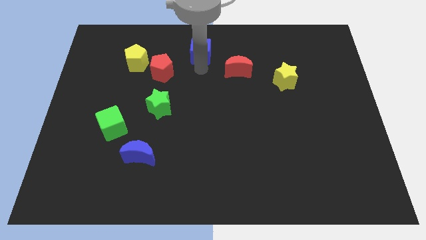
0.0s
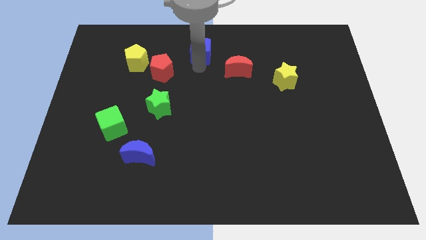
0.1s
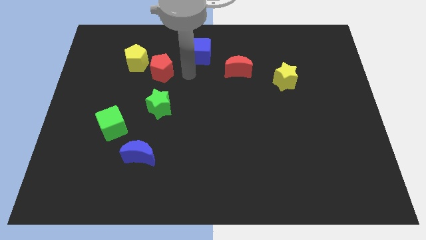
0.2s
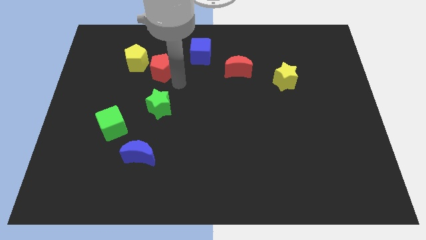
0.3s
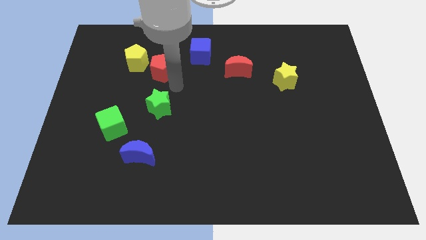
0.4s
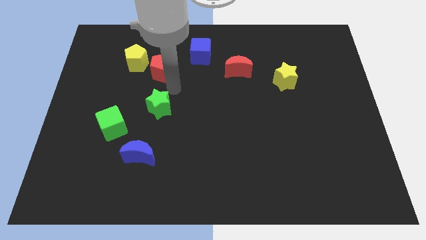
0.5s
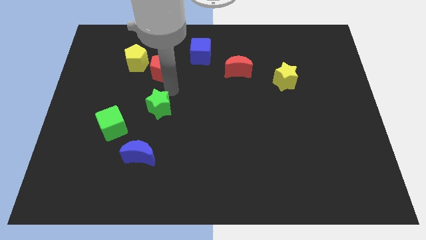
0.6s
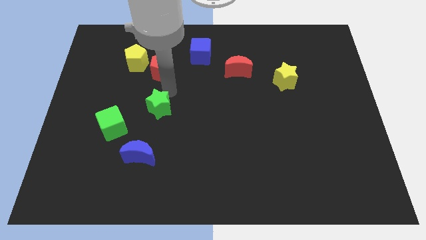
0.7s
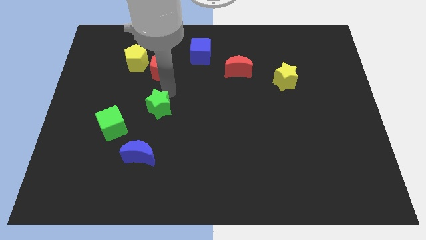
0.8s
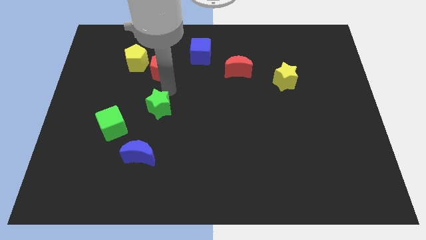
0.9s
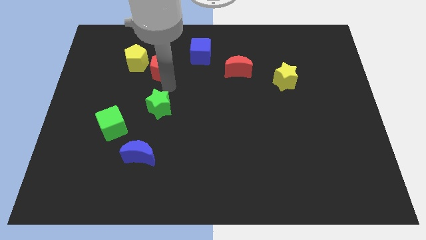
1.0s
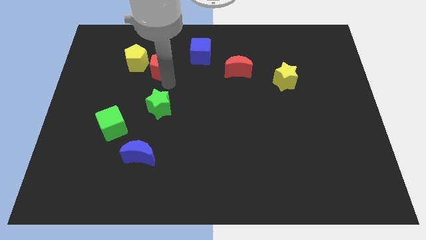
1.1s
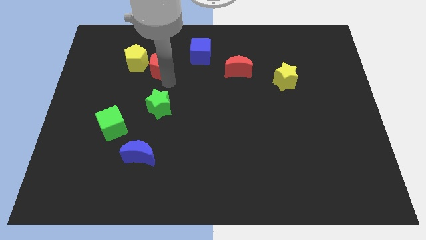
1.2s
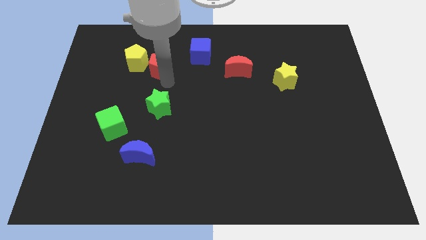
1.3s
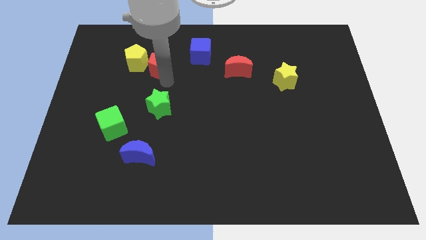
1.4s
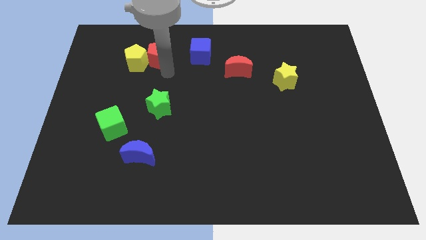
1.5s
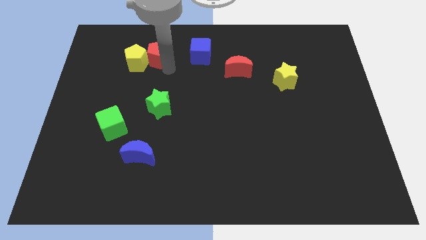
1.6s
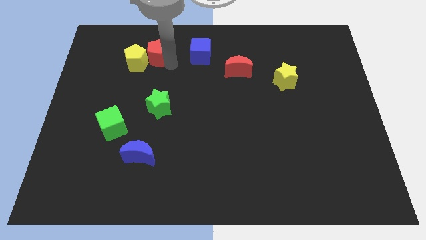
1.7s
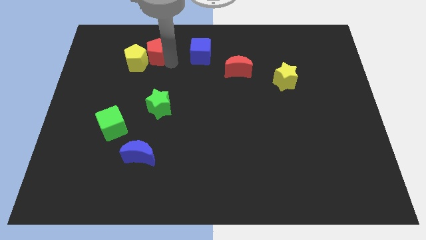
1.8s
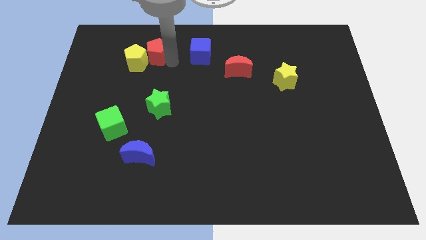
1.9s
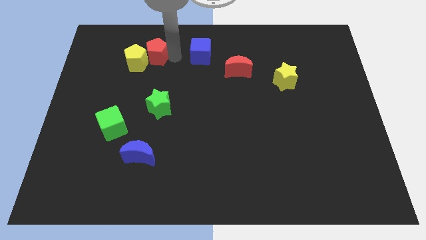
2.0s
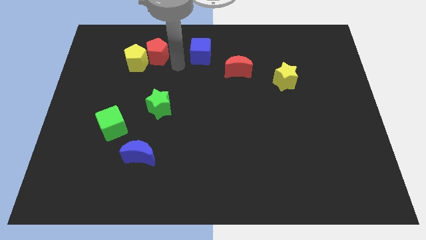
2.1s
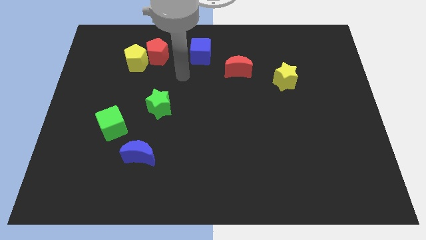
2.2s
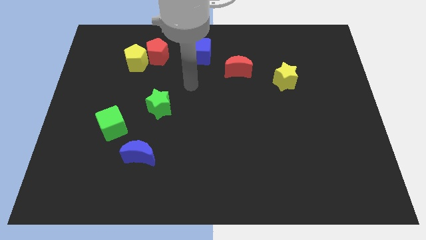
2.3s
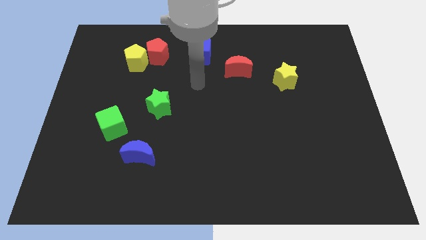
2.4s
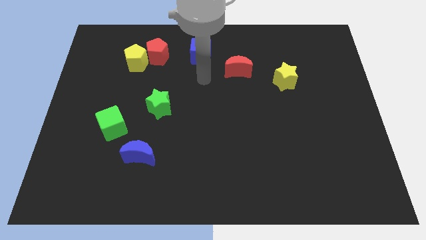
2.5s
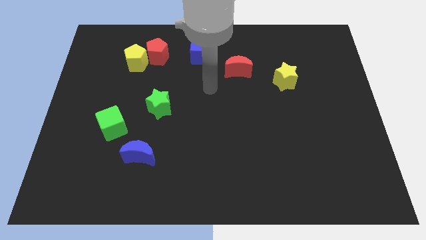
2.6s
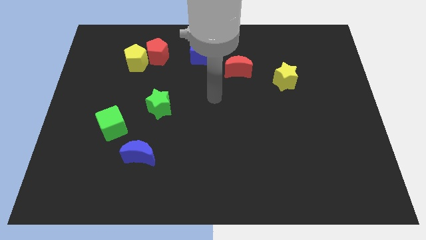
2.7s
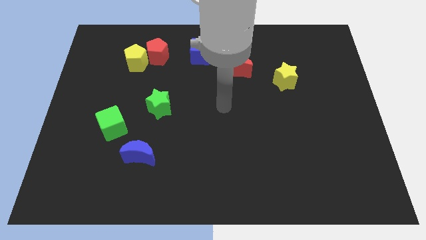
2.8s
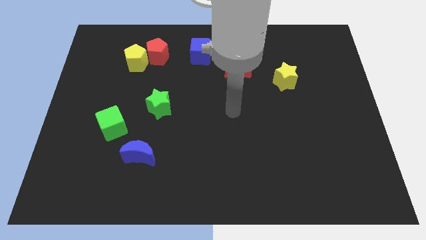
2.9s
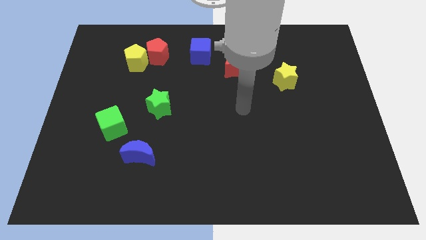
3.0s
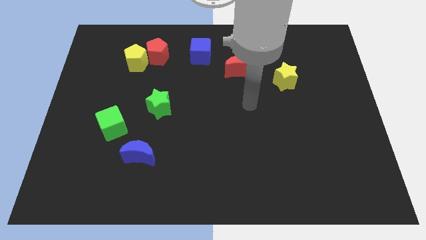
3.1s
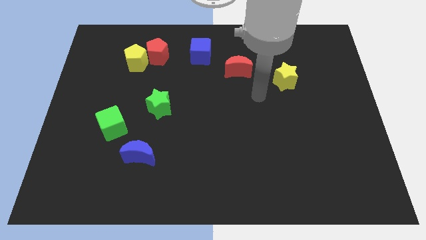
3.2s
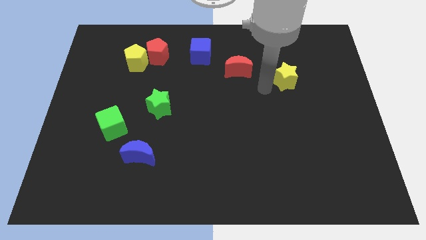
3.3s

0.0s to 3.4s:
move the arm to the bottom left of the yellow star

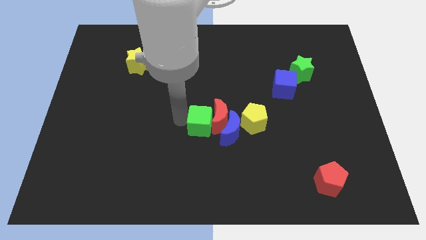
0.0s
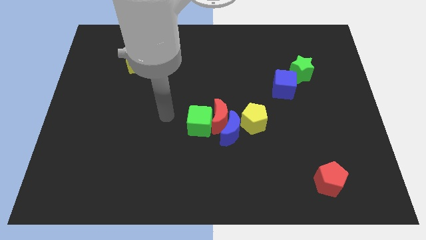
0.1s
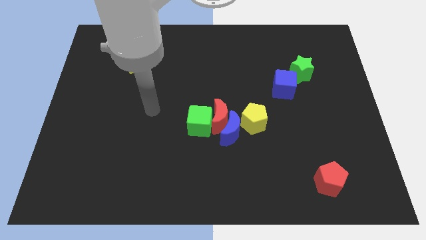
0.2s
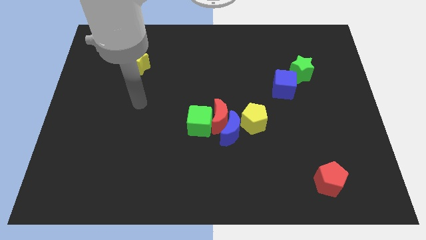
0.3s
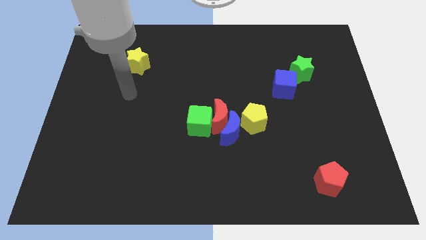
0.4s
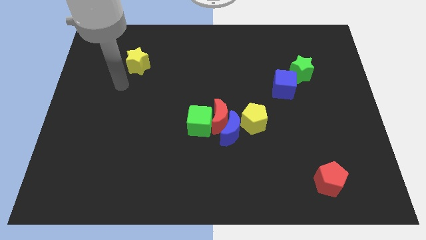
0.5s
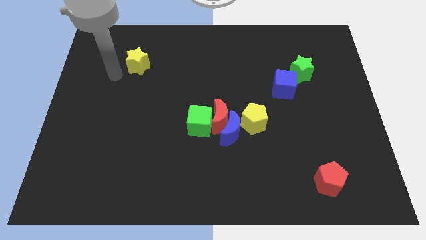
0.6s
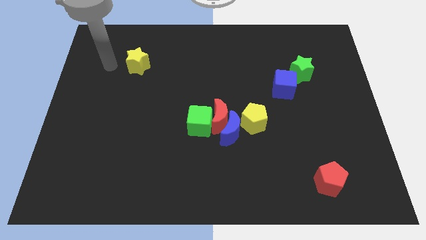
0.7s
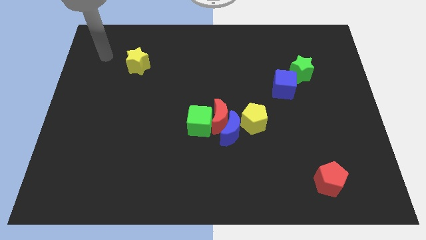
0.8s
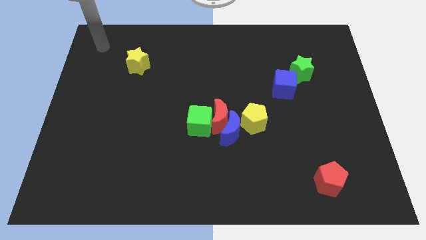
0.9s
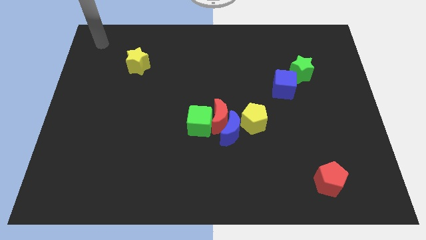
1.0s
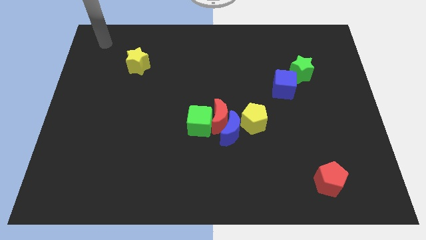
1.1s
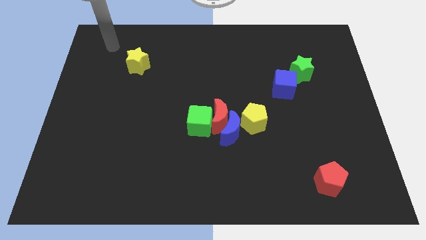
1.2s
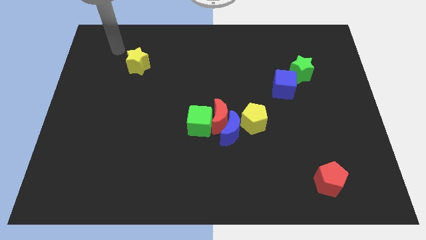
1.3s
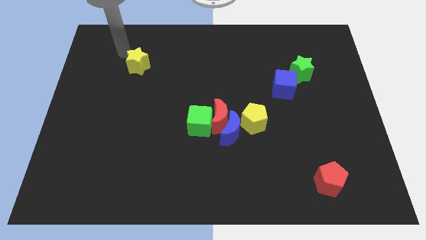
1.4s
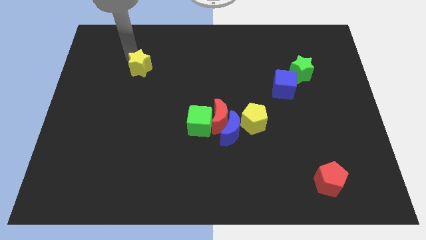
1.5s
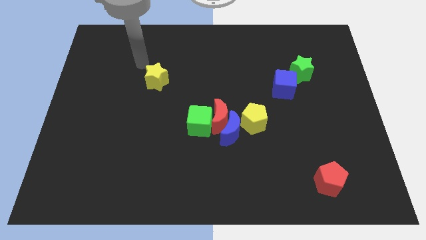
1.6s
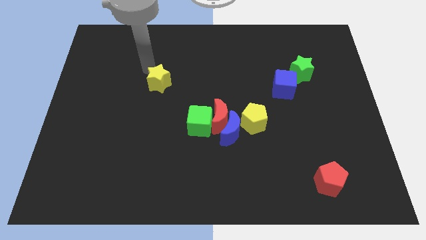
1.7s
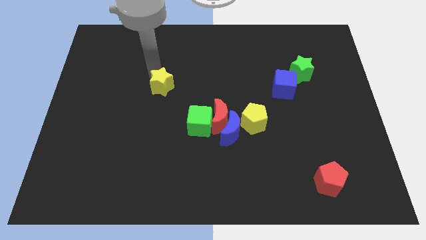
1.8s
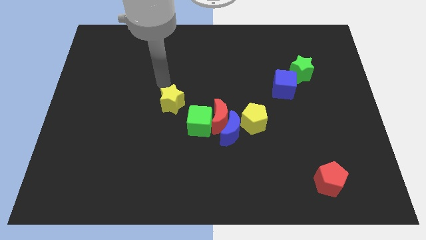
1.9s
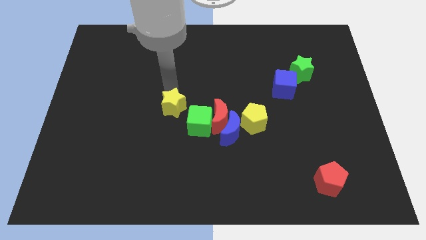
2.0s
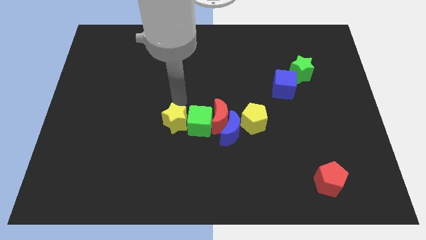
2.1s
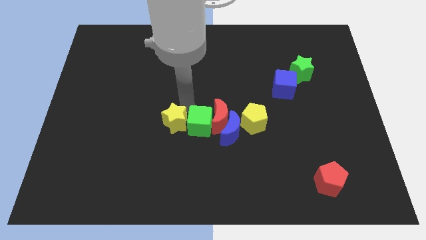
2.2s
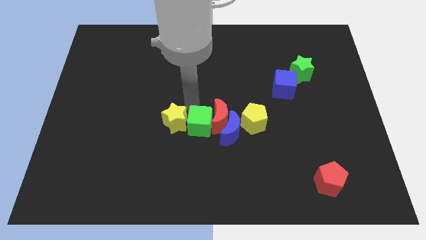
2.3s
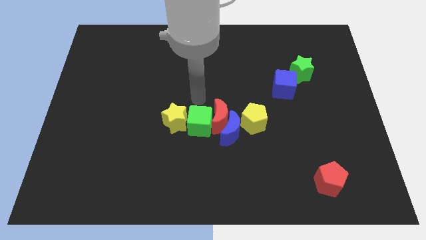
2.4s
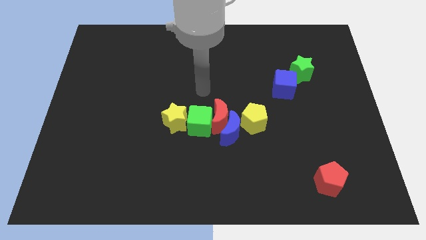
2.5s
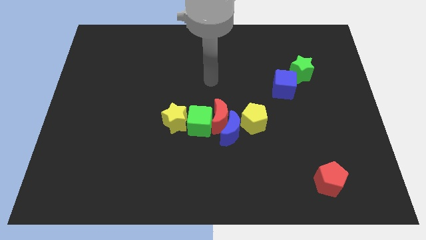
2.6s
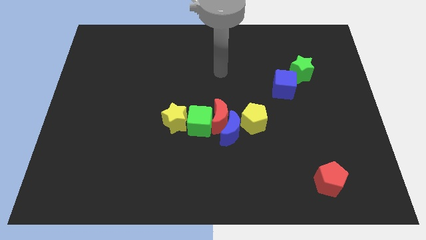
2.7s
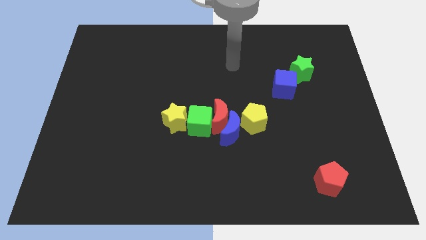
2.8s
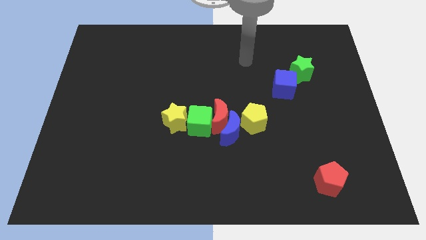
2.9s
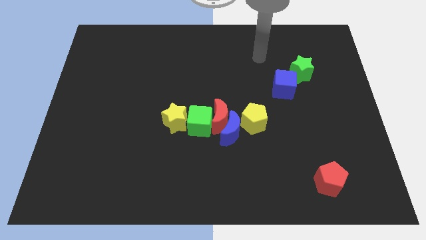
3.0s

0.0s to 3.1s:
move the yellow star at the left side of the green cube

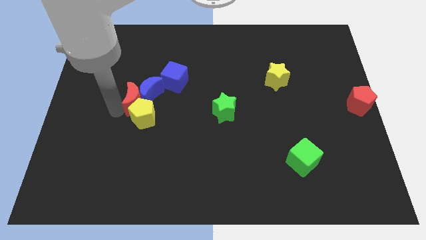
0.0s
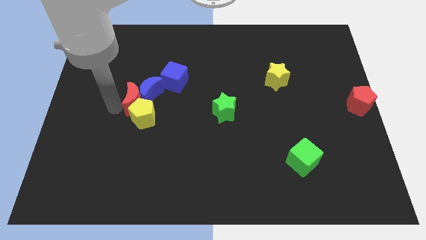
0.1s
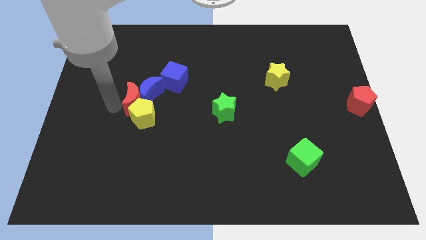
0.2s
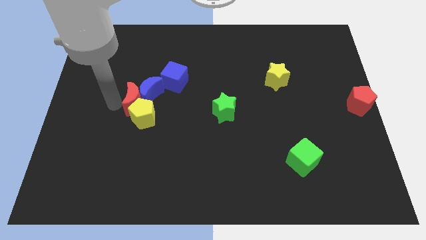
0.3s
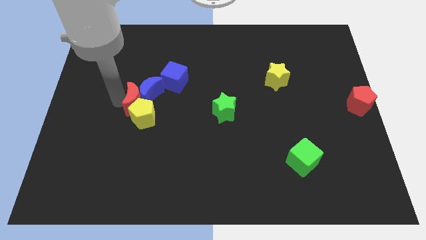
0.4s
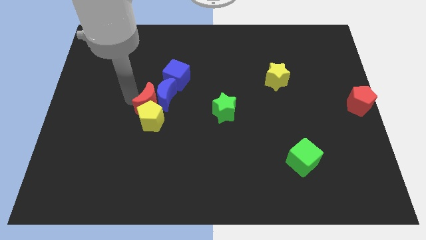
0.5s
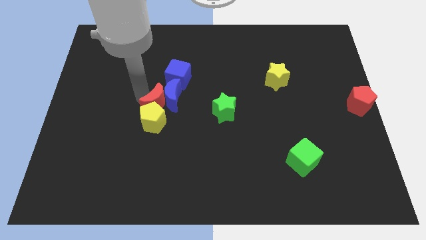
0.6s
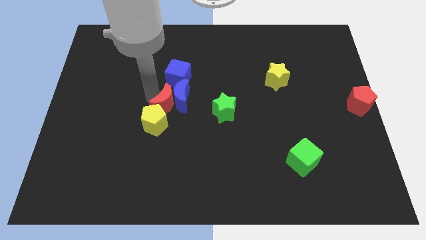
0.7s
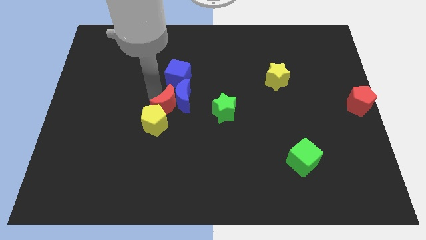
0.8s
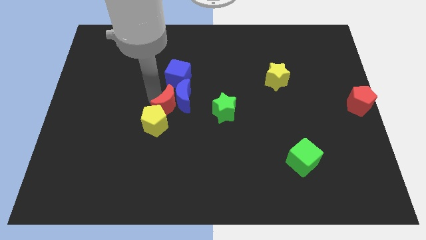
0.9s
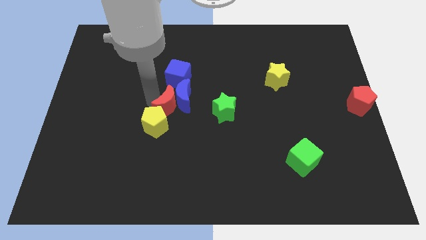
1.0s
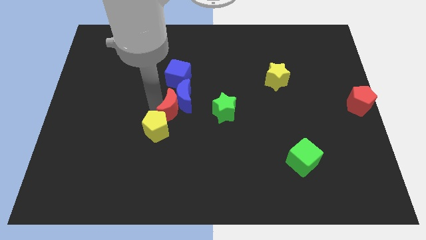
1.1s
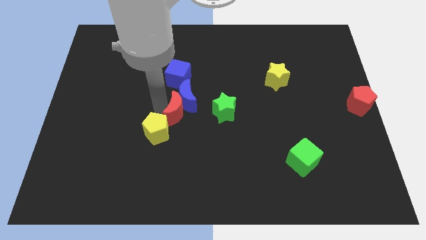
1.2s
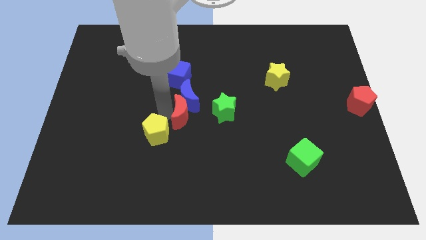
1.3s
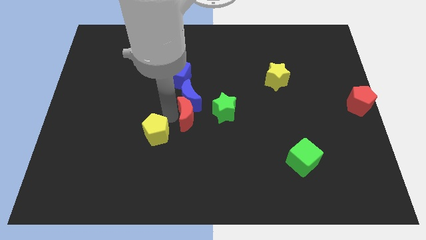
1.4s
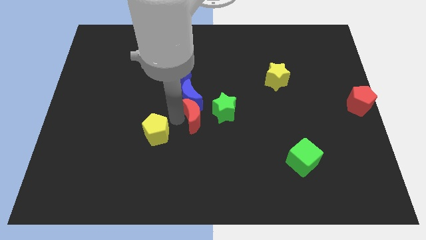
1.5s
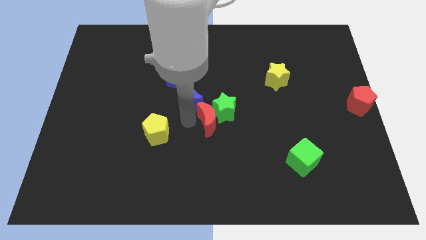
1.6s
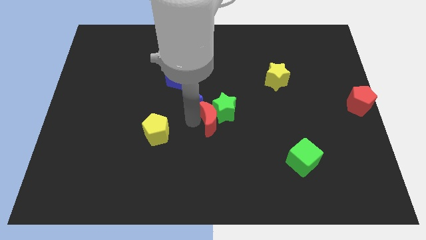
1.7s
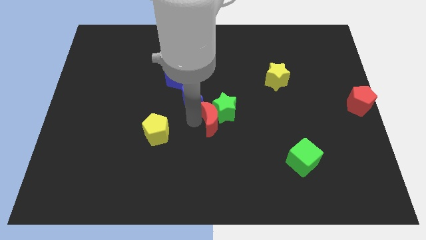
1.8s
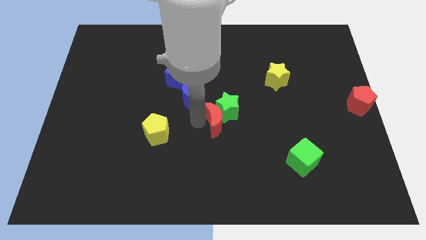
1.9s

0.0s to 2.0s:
push red crescent towards green star

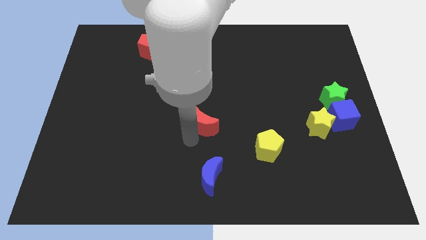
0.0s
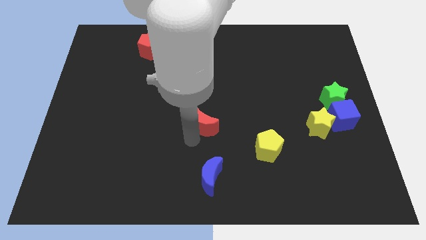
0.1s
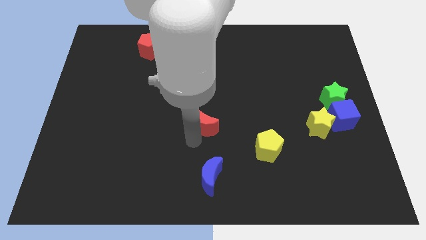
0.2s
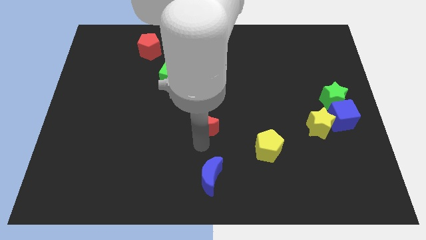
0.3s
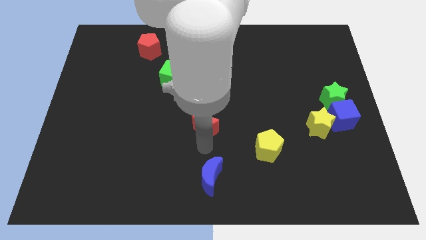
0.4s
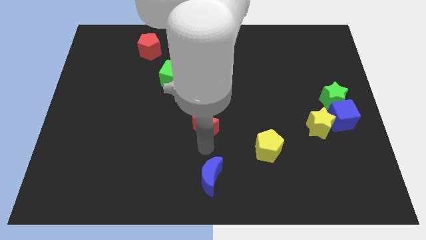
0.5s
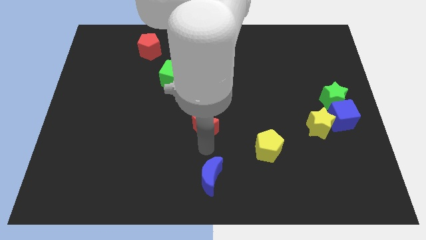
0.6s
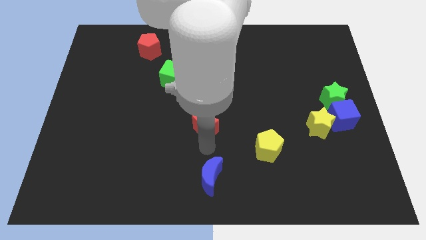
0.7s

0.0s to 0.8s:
place your arm in between the blue crescent and red crescent
